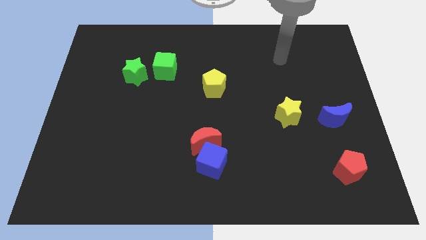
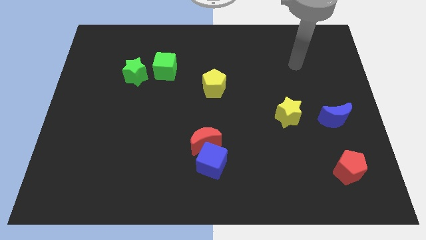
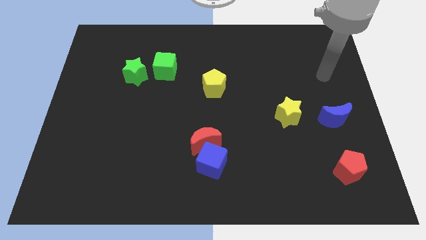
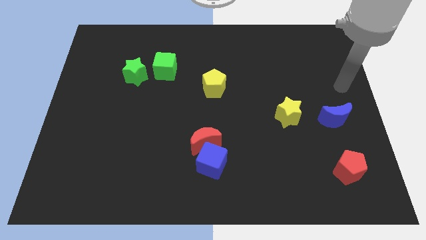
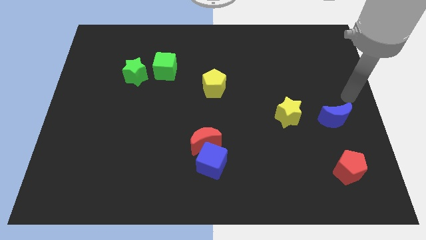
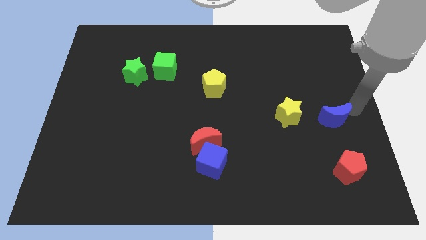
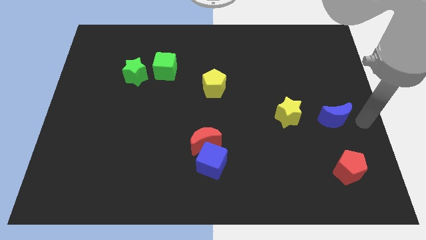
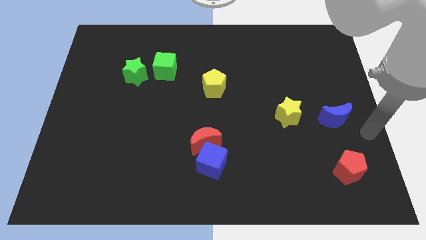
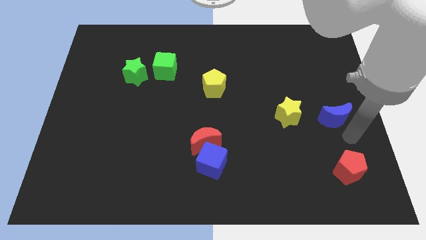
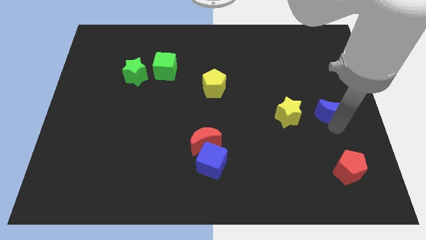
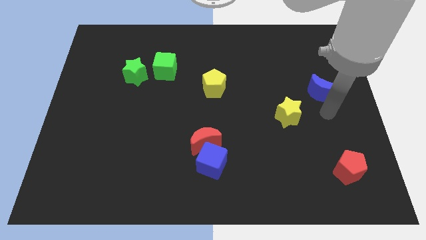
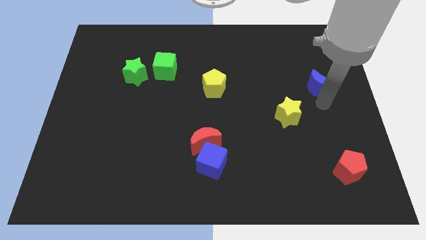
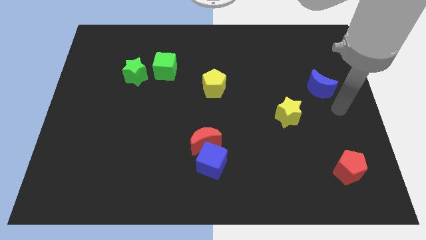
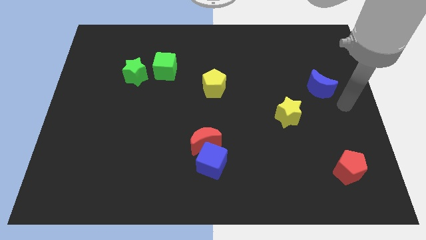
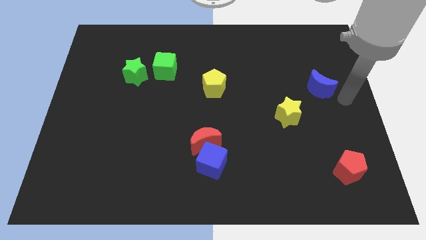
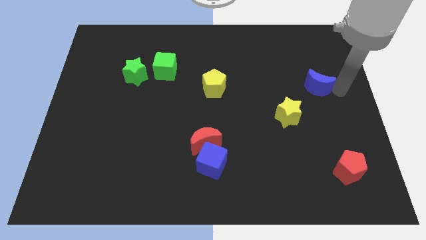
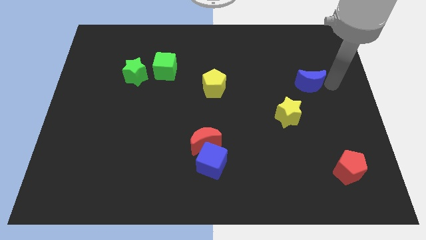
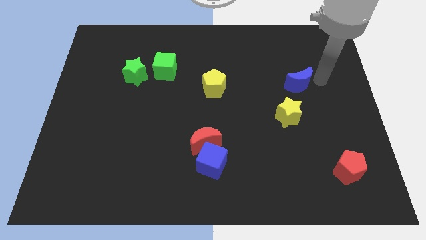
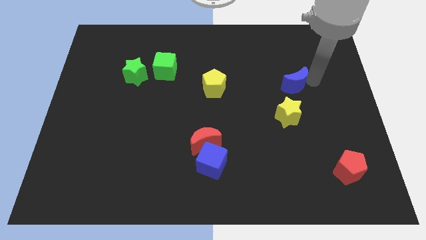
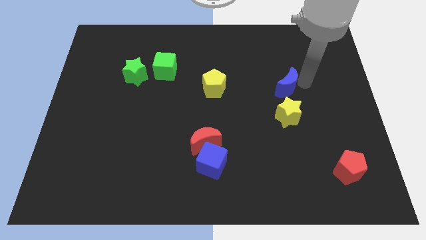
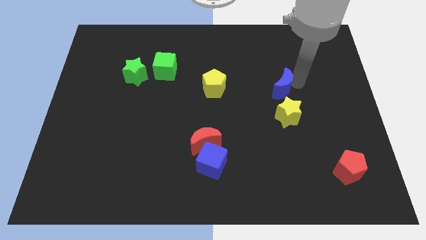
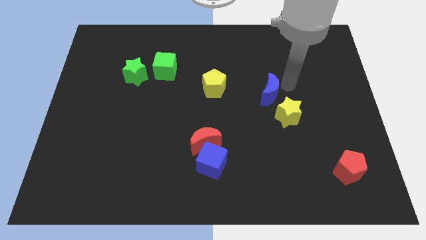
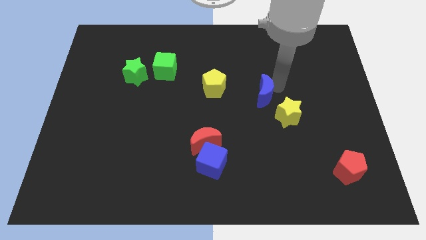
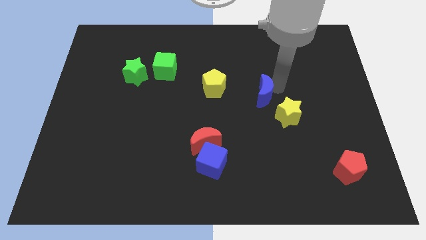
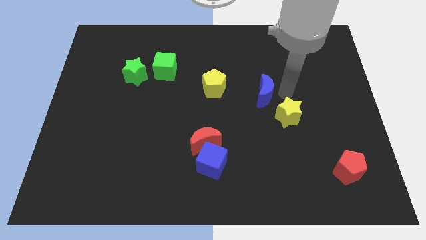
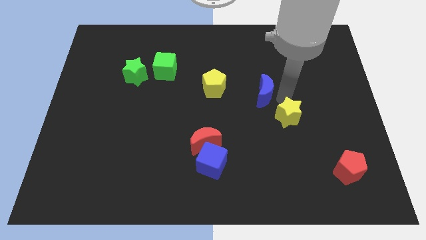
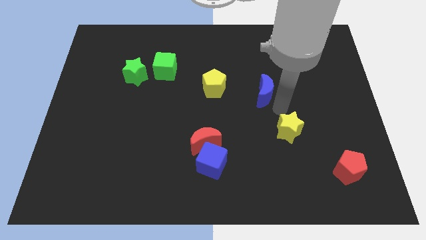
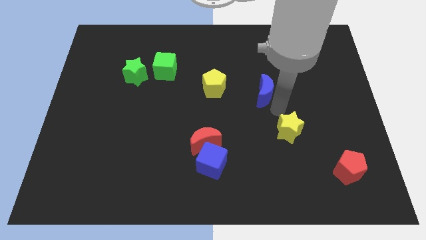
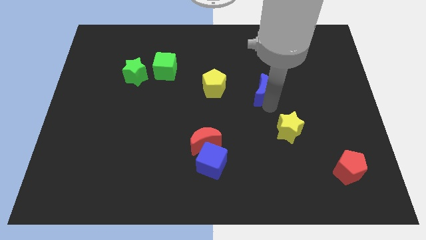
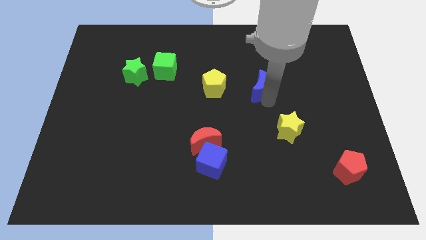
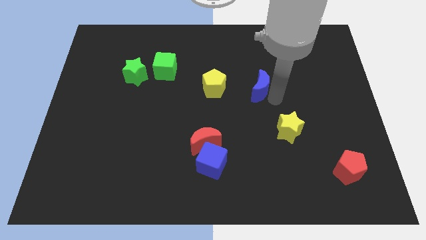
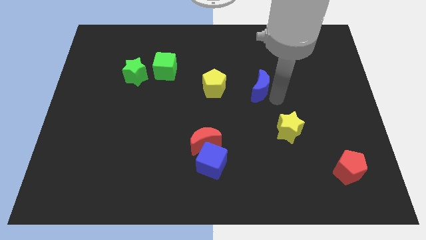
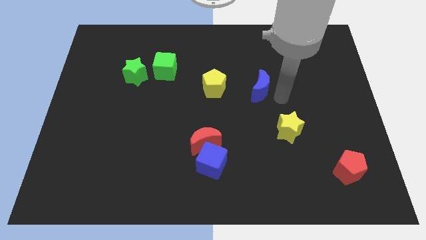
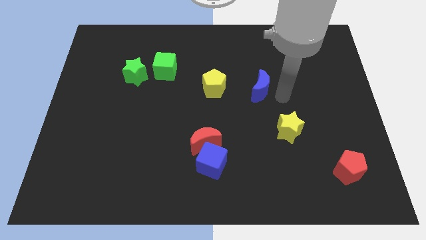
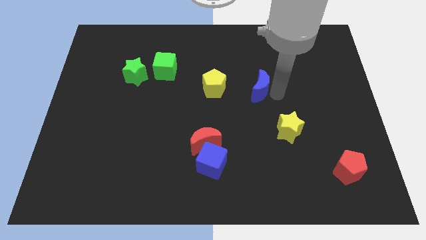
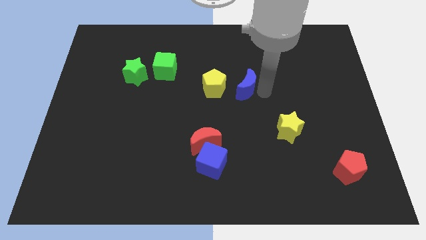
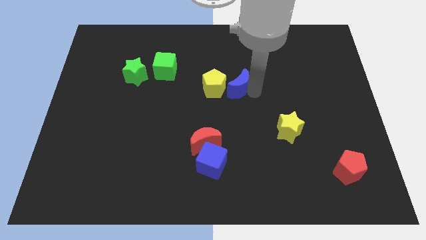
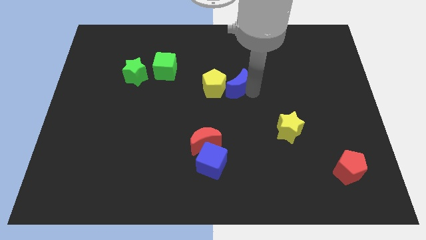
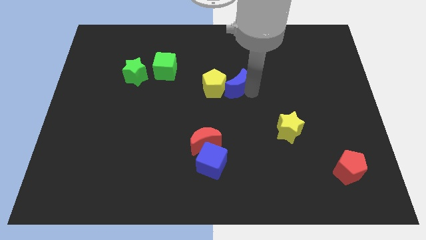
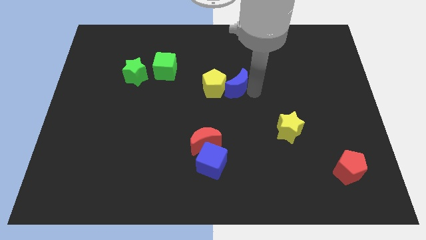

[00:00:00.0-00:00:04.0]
move the blue moon next to the yellow pentagon

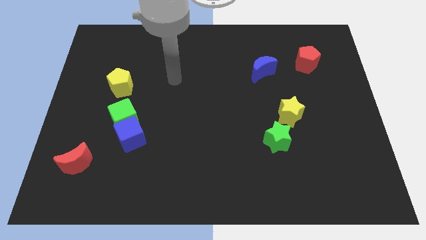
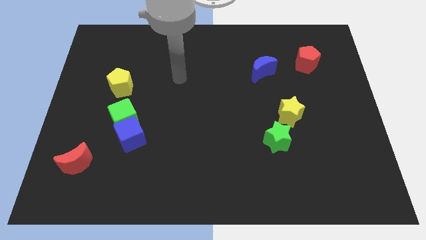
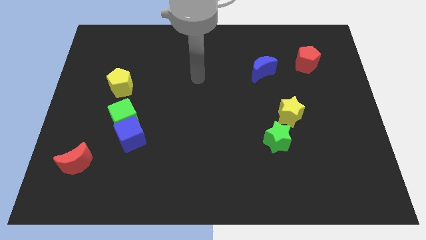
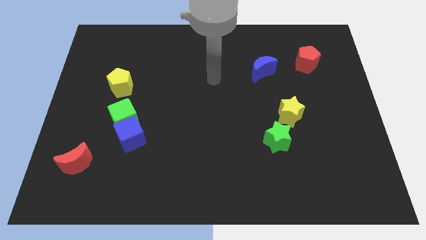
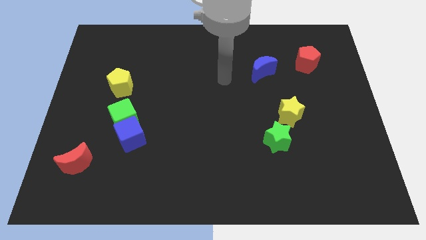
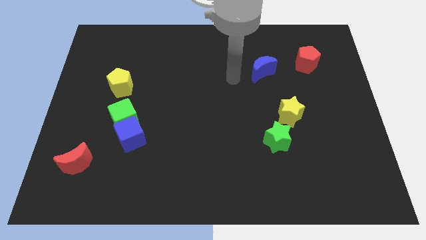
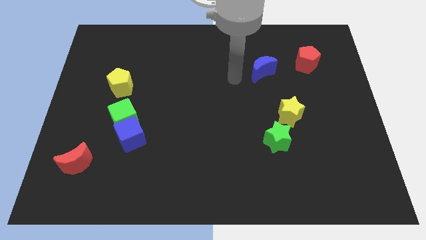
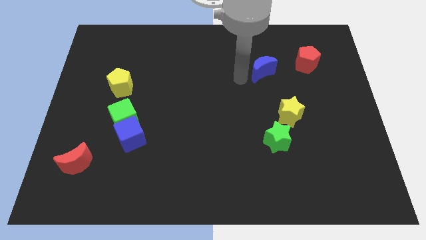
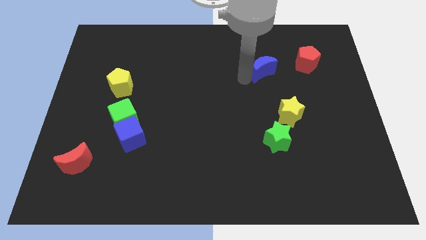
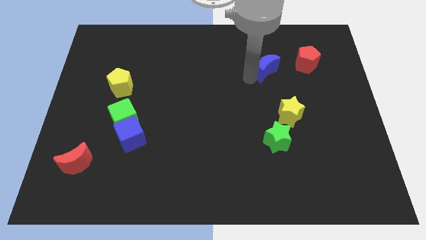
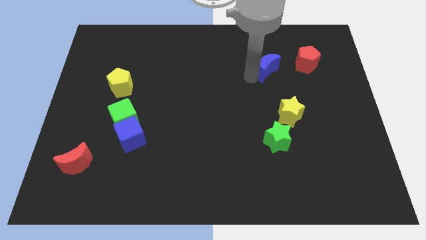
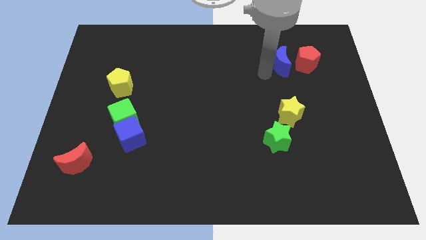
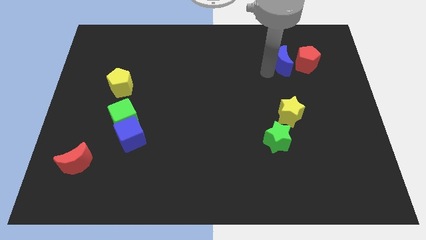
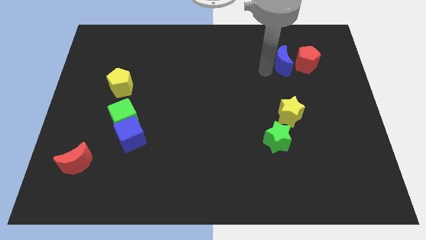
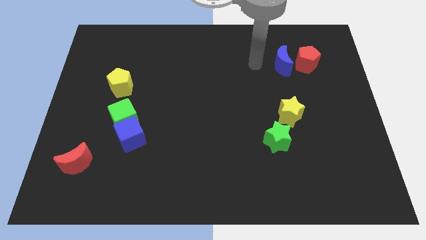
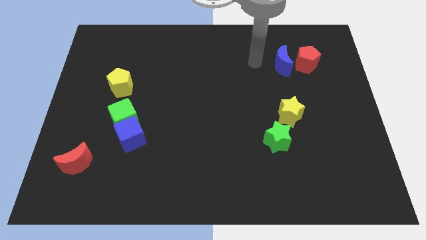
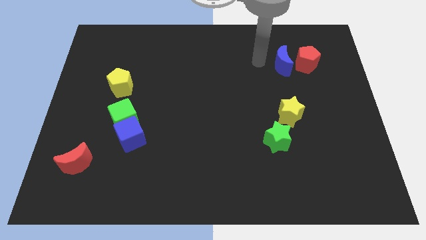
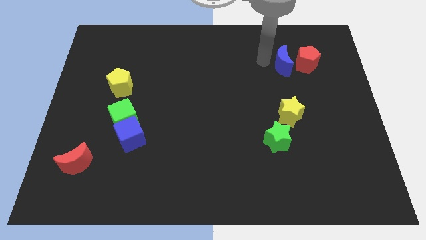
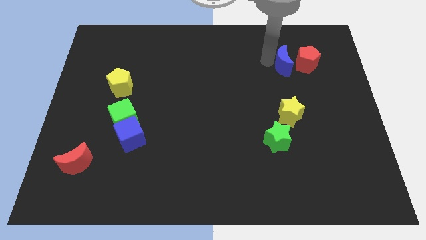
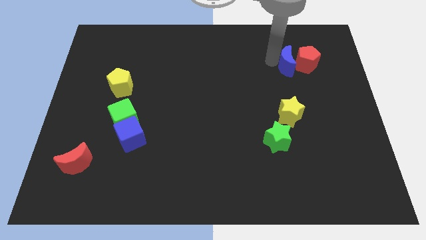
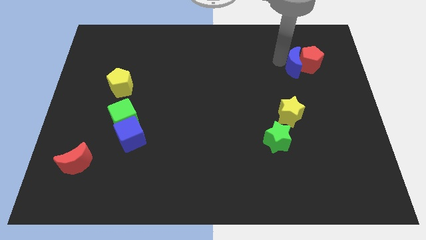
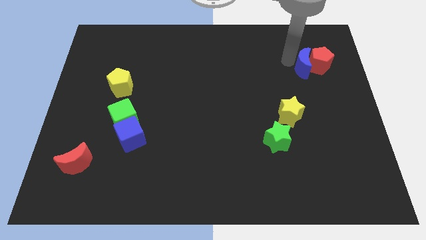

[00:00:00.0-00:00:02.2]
push the blue moon to the red pentagon

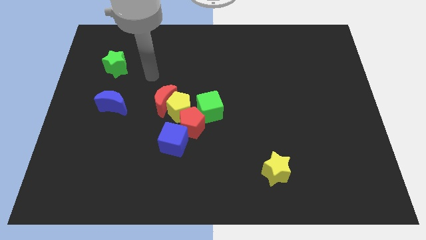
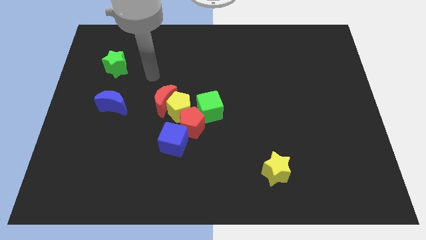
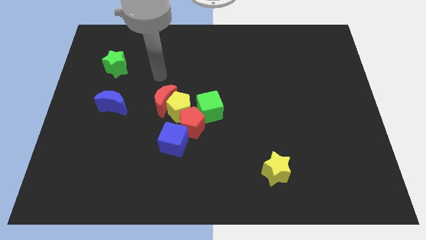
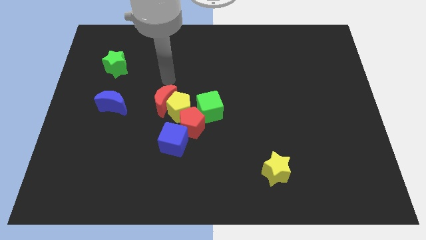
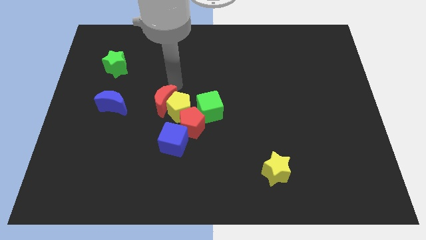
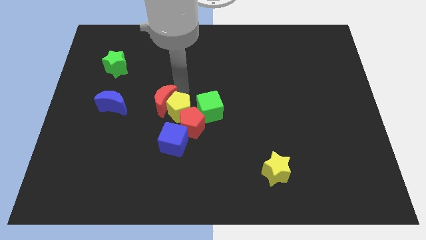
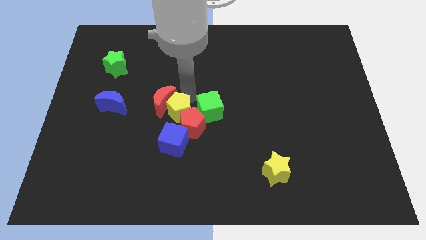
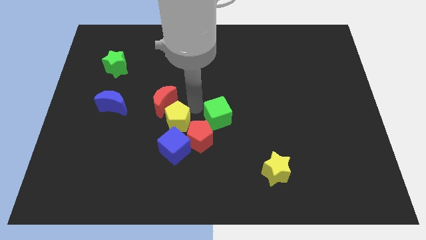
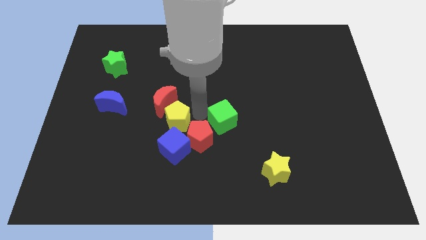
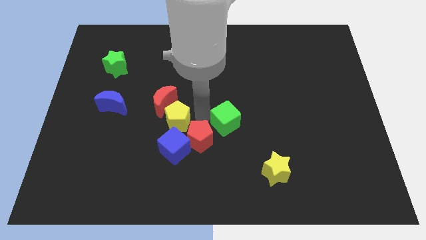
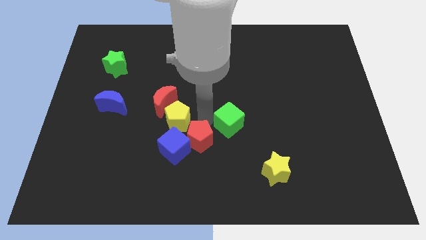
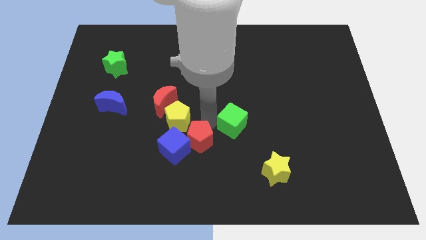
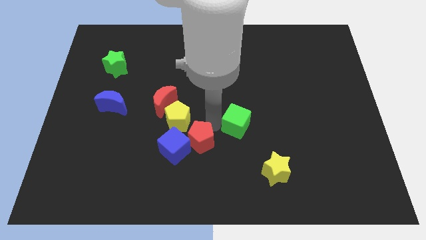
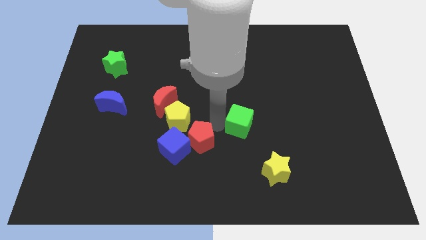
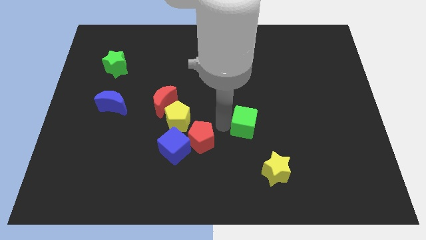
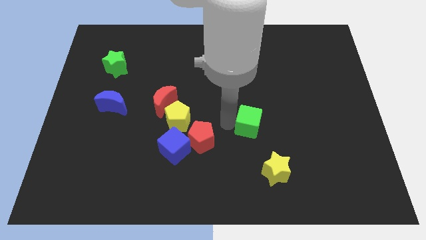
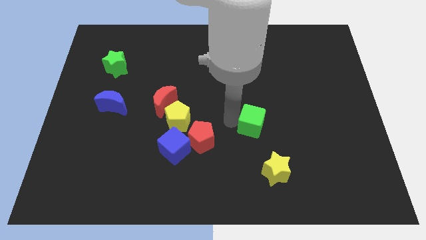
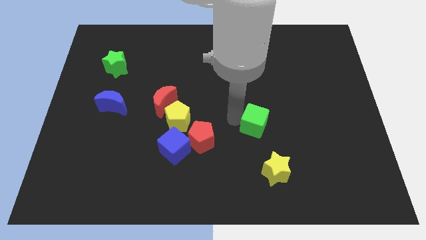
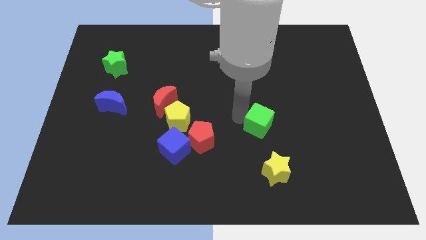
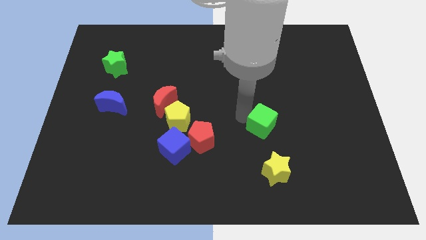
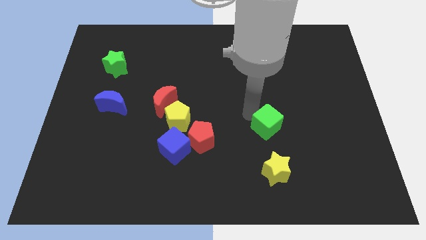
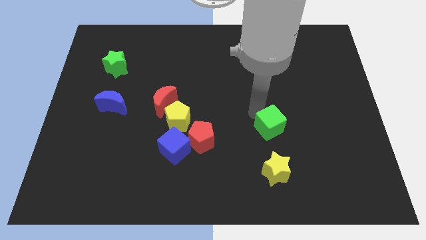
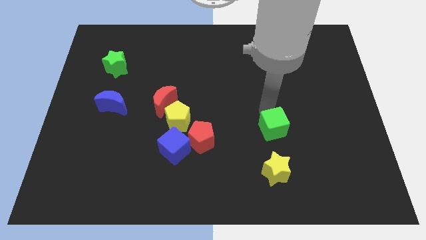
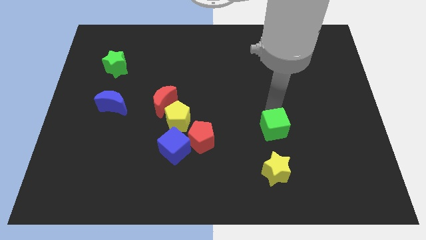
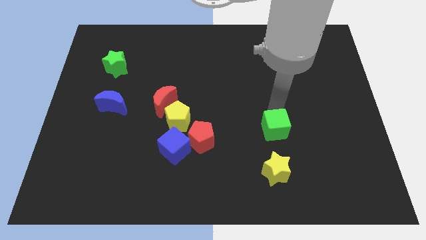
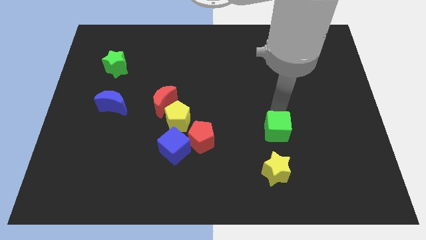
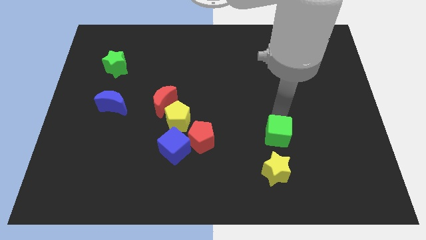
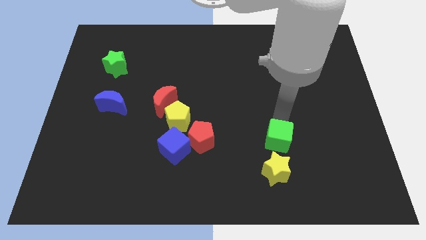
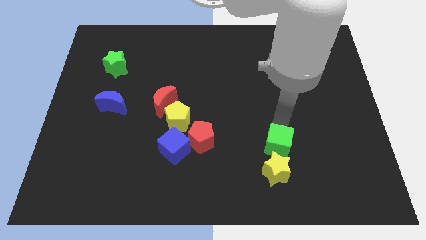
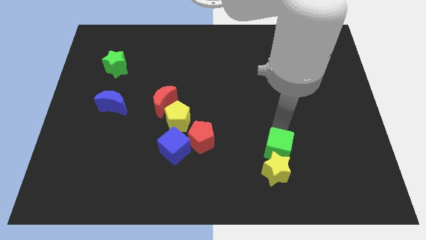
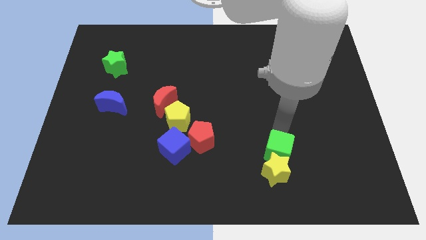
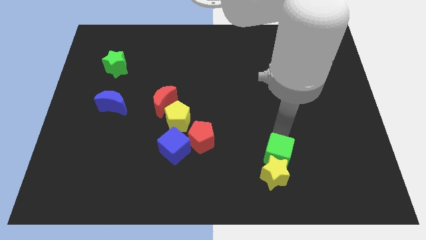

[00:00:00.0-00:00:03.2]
slide the green cube to the yellow star
